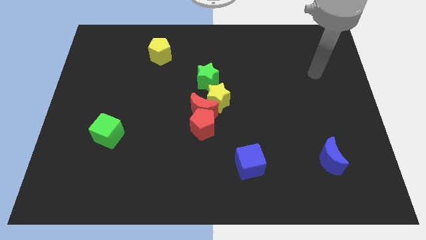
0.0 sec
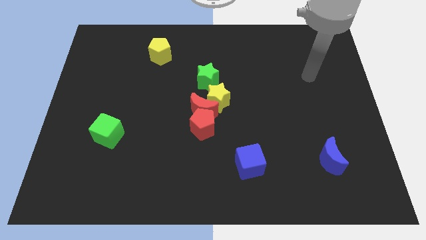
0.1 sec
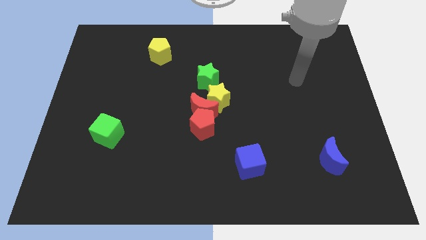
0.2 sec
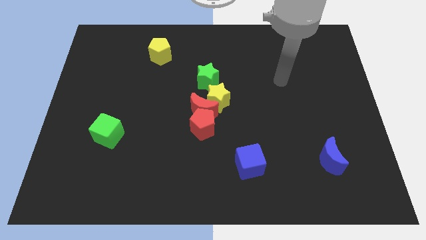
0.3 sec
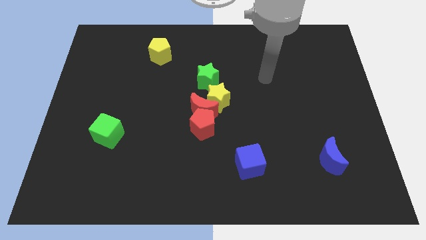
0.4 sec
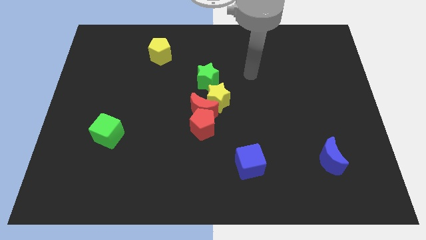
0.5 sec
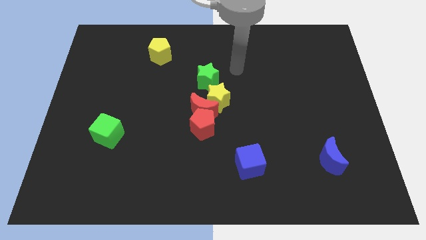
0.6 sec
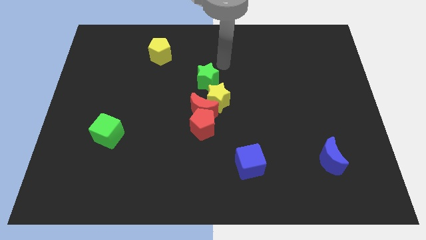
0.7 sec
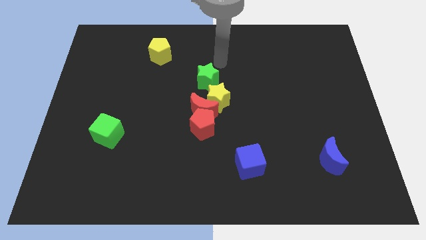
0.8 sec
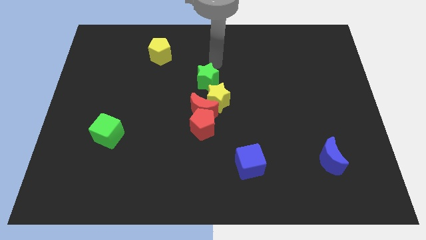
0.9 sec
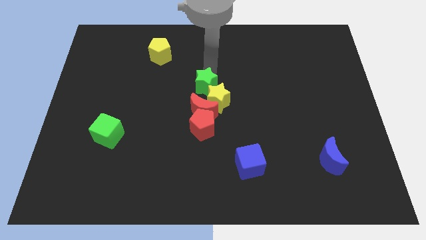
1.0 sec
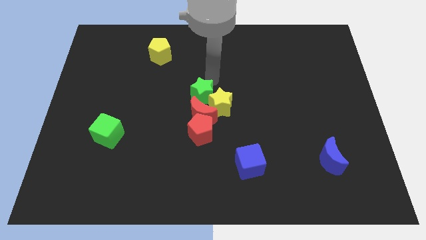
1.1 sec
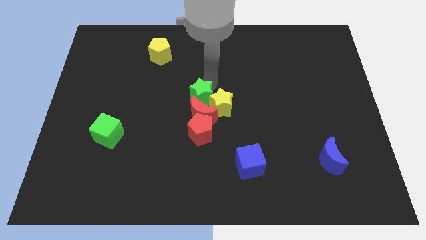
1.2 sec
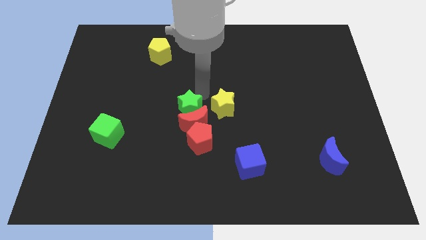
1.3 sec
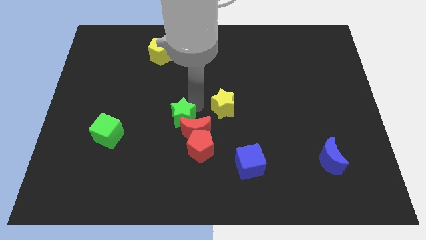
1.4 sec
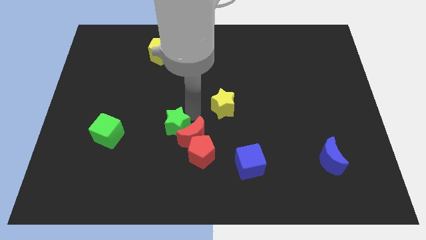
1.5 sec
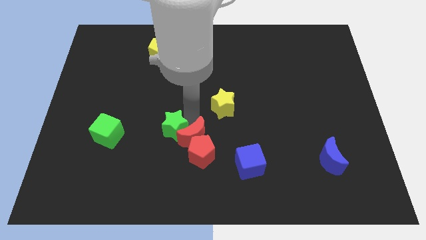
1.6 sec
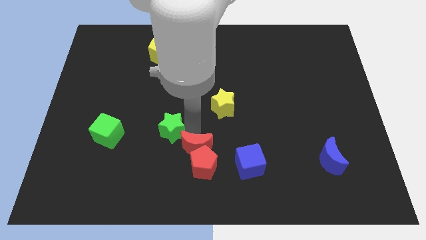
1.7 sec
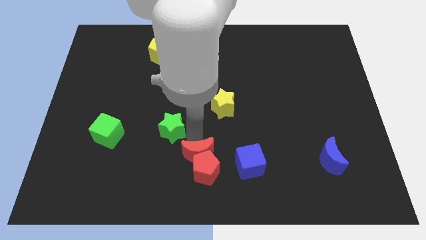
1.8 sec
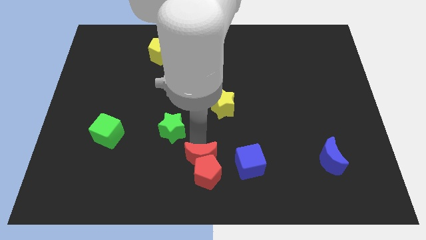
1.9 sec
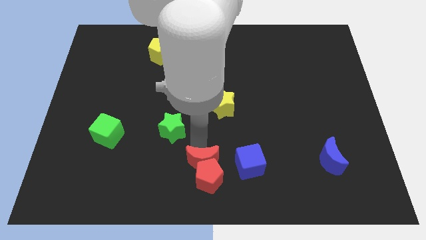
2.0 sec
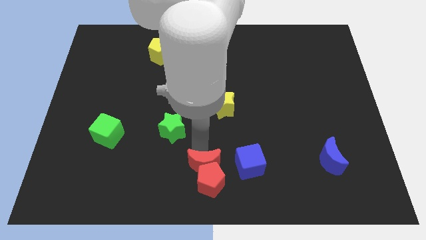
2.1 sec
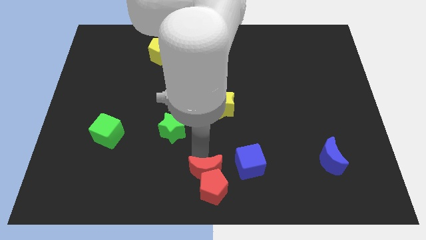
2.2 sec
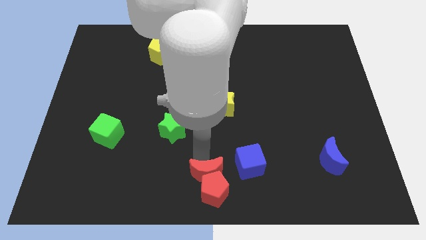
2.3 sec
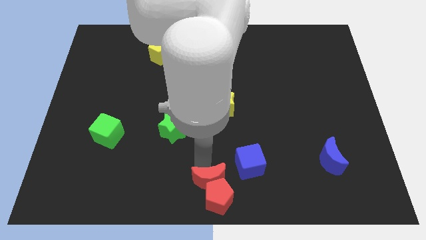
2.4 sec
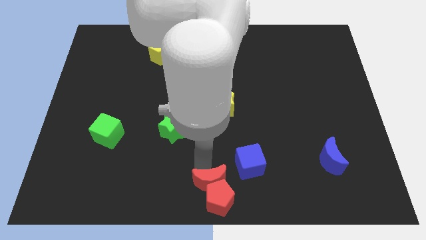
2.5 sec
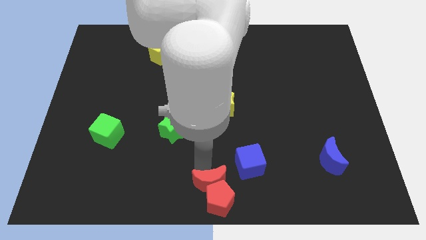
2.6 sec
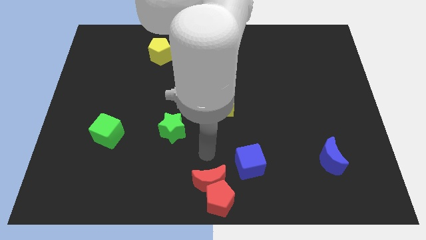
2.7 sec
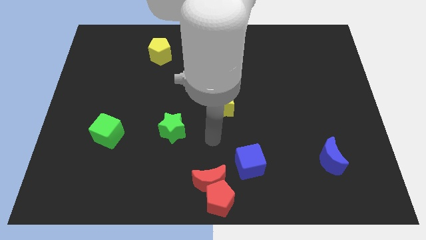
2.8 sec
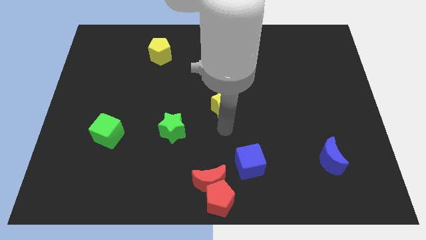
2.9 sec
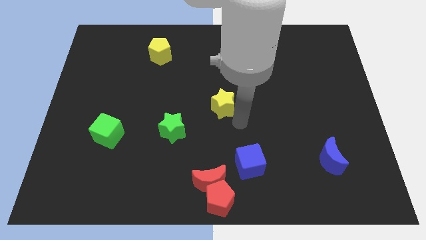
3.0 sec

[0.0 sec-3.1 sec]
slide the red blocks away from the green and the yellow star

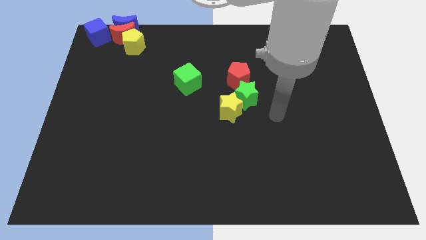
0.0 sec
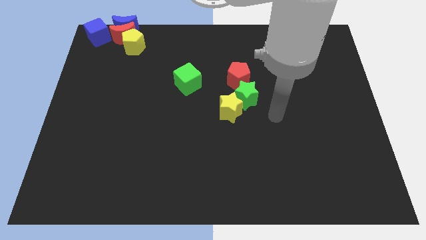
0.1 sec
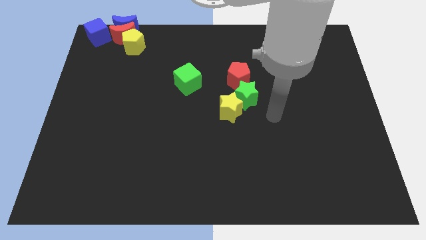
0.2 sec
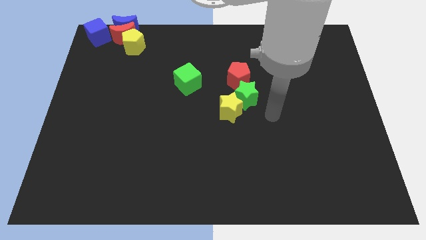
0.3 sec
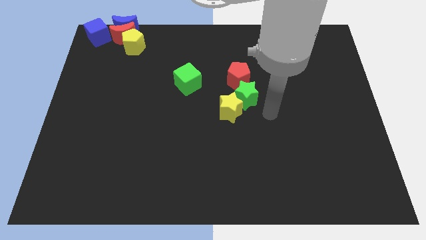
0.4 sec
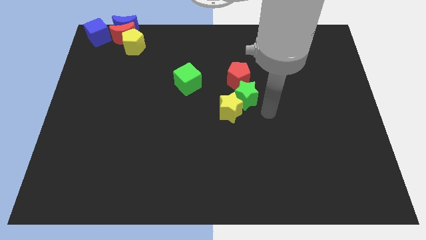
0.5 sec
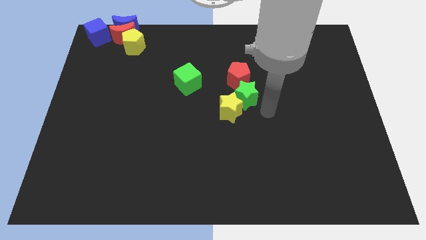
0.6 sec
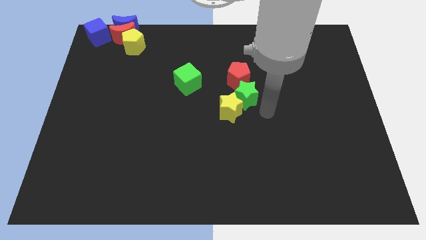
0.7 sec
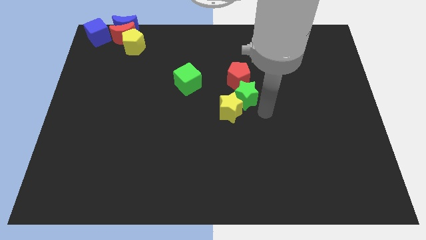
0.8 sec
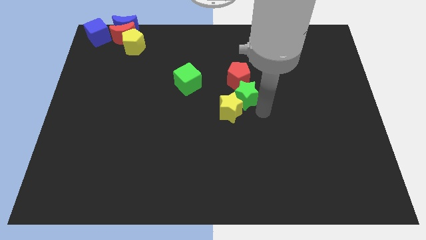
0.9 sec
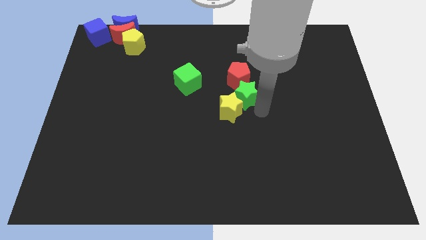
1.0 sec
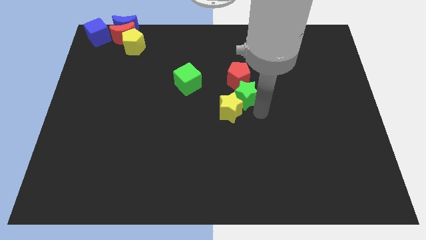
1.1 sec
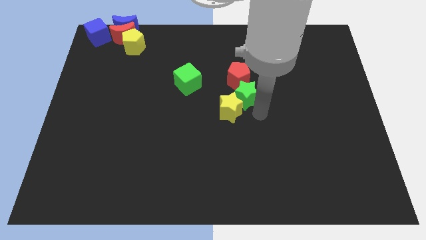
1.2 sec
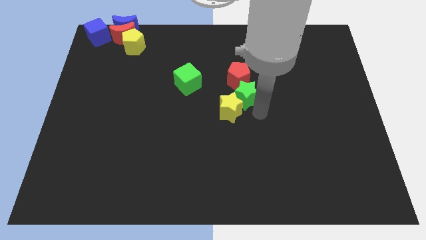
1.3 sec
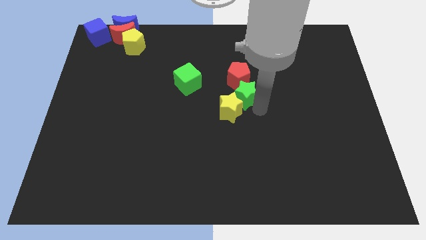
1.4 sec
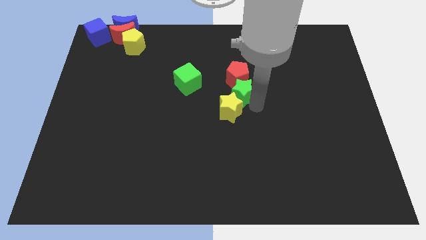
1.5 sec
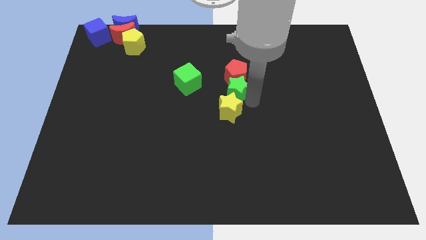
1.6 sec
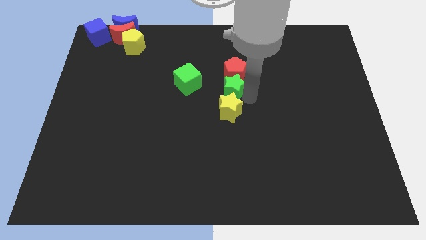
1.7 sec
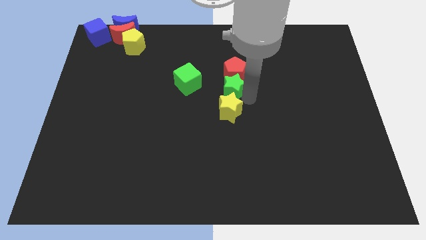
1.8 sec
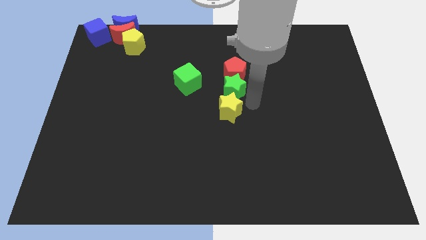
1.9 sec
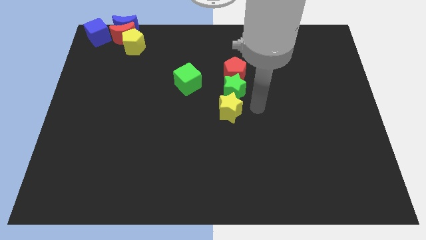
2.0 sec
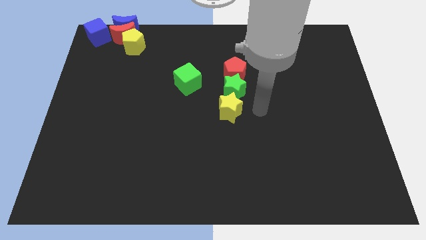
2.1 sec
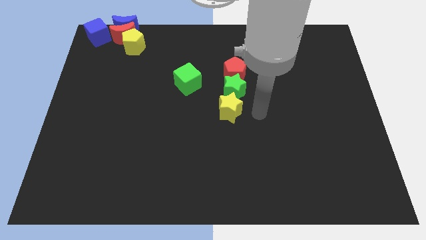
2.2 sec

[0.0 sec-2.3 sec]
place green star in between yellow star and red pentagon

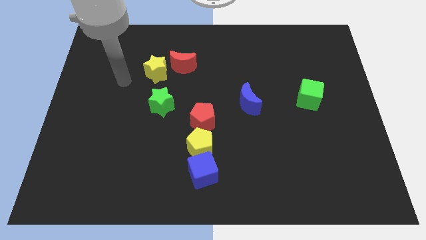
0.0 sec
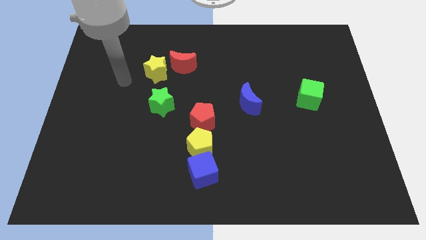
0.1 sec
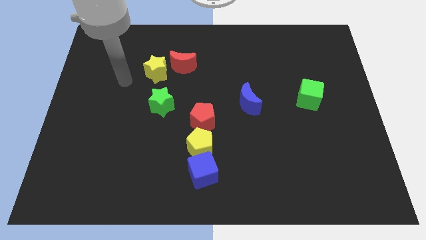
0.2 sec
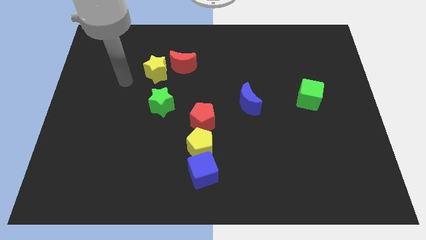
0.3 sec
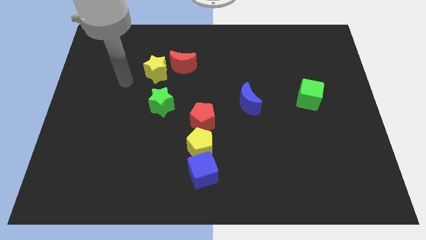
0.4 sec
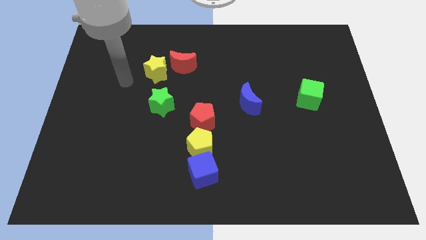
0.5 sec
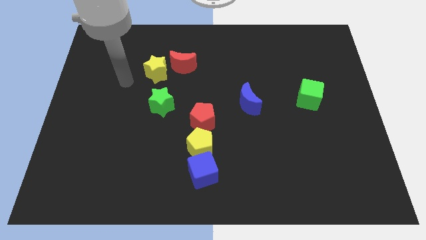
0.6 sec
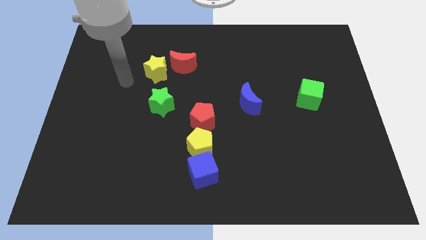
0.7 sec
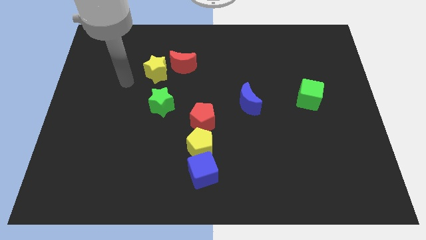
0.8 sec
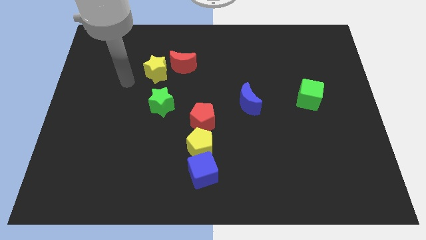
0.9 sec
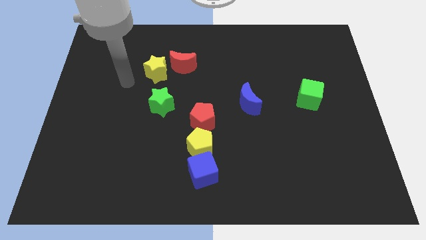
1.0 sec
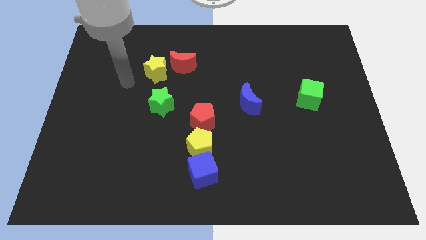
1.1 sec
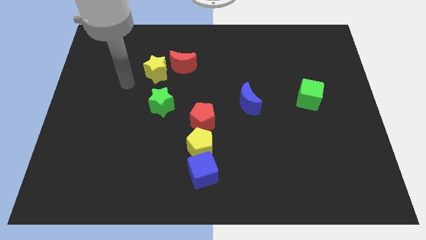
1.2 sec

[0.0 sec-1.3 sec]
move your arm slightly towards the yellow star

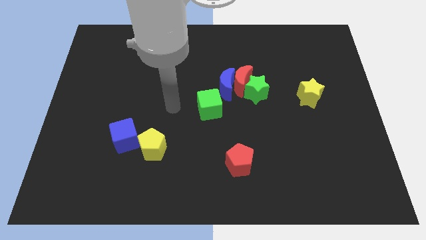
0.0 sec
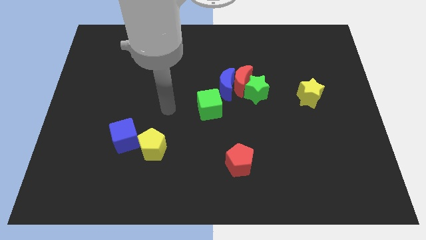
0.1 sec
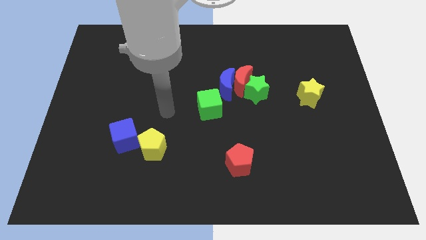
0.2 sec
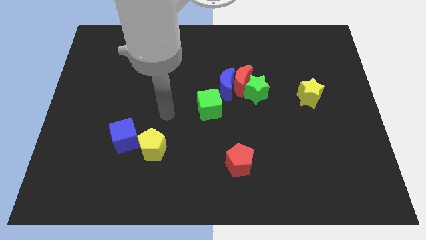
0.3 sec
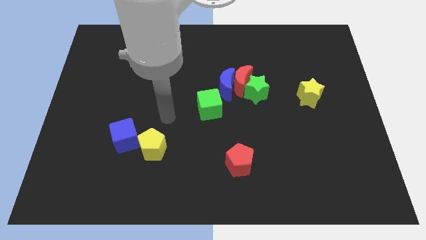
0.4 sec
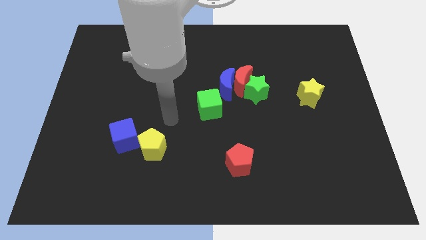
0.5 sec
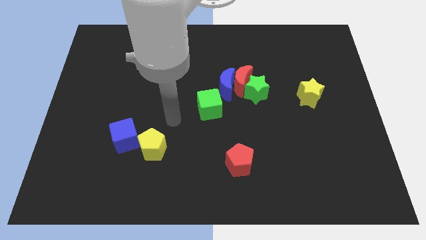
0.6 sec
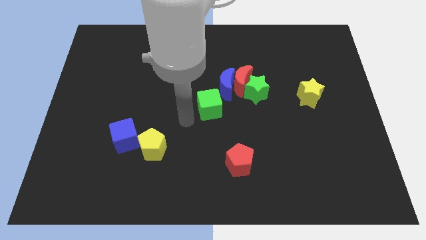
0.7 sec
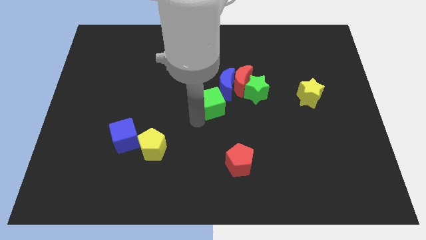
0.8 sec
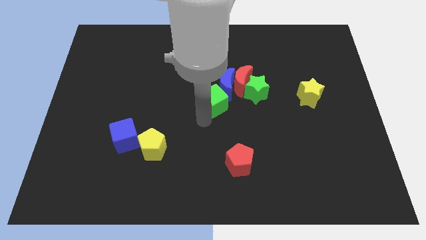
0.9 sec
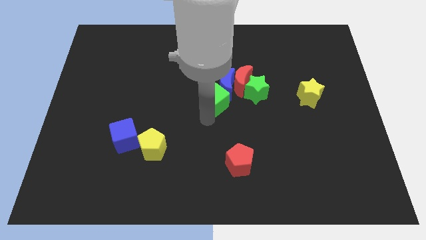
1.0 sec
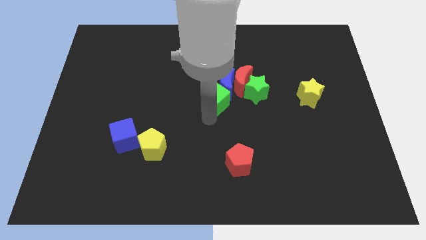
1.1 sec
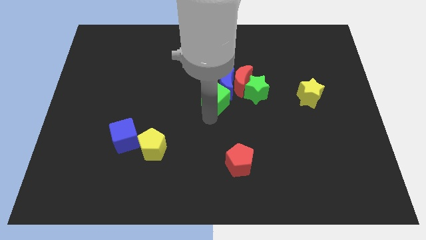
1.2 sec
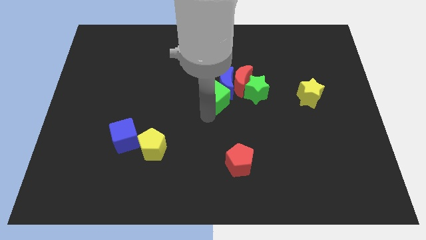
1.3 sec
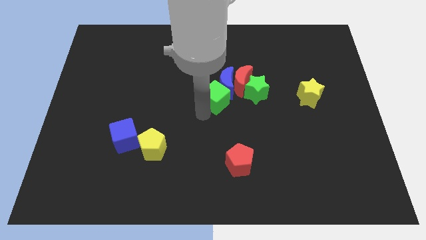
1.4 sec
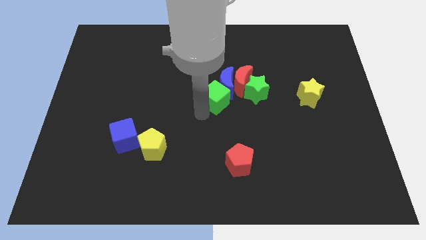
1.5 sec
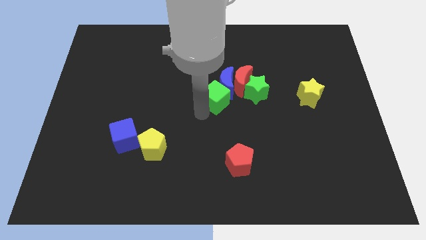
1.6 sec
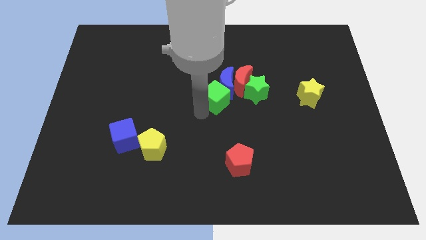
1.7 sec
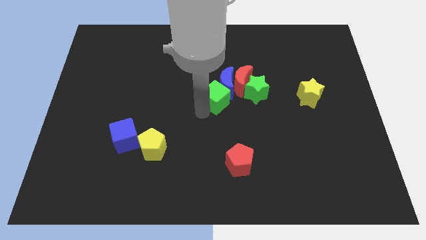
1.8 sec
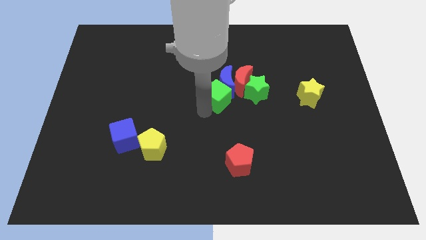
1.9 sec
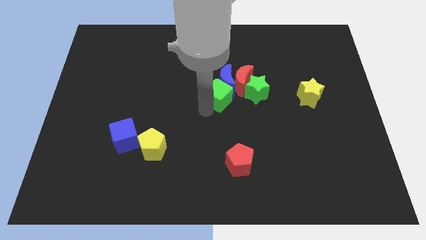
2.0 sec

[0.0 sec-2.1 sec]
slide green cube into blue moon

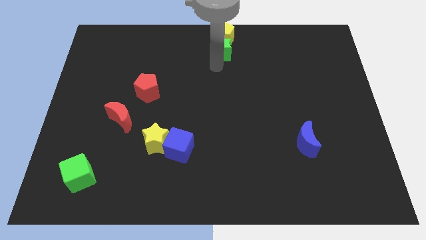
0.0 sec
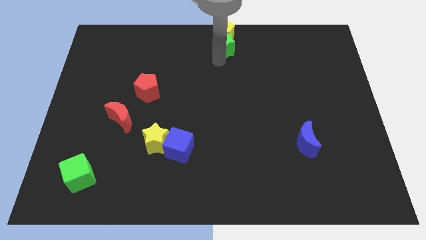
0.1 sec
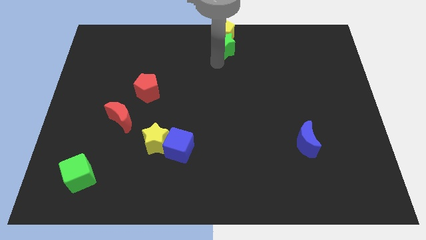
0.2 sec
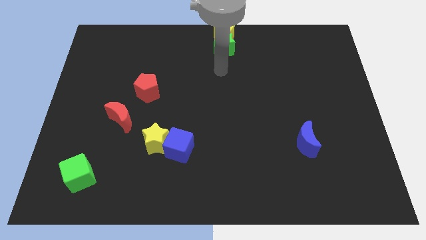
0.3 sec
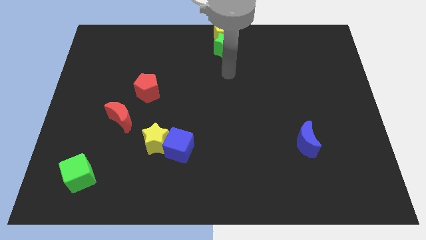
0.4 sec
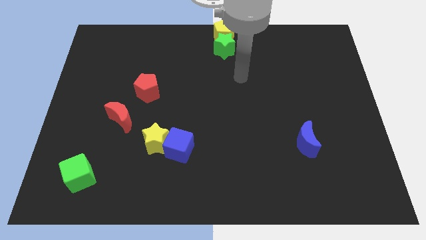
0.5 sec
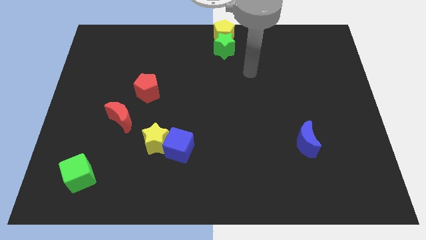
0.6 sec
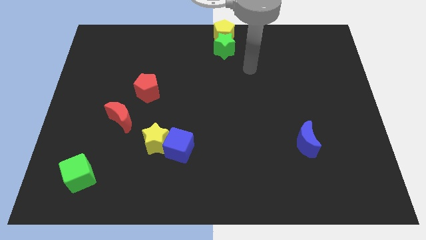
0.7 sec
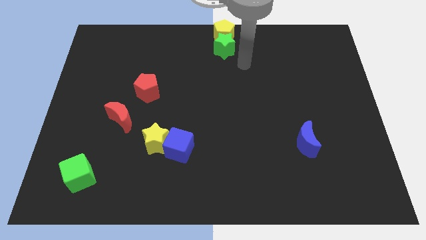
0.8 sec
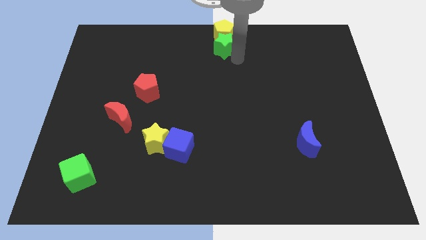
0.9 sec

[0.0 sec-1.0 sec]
move the arm towards the right side of the green star
